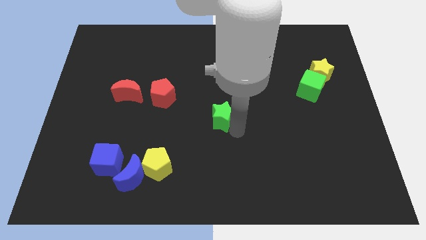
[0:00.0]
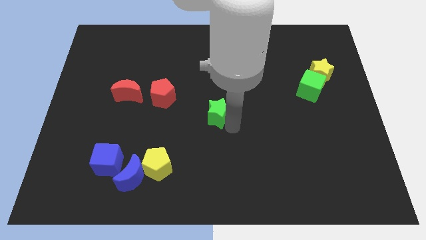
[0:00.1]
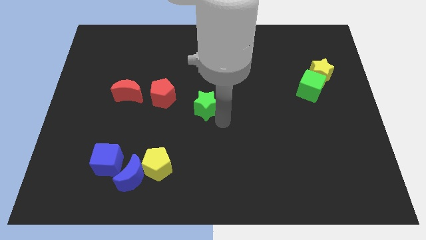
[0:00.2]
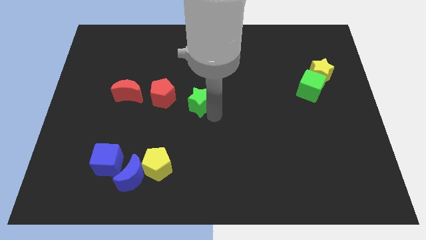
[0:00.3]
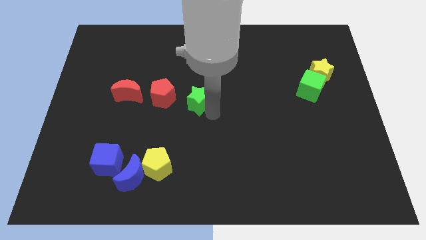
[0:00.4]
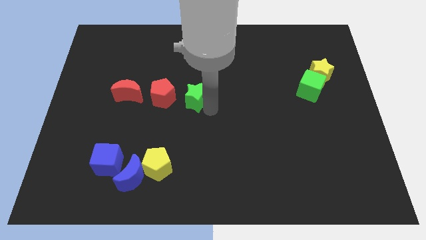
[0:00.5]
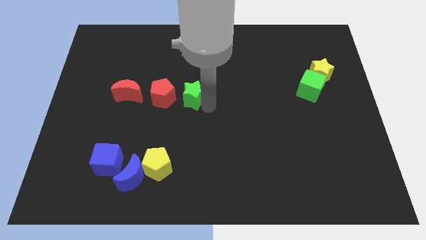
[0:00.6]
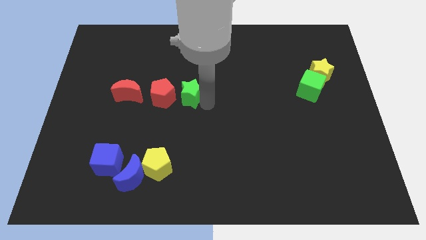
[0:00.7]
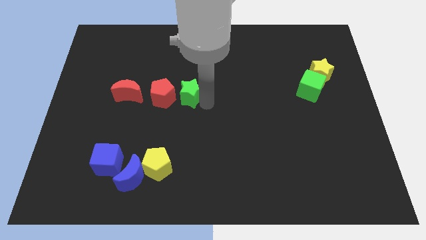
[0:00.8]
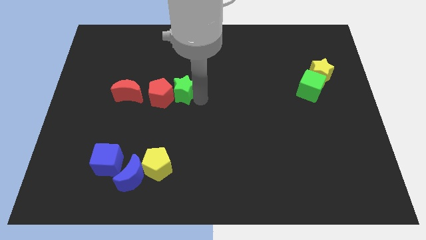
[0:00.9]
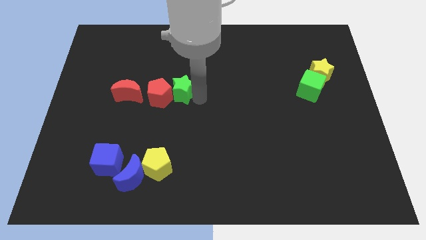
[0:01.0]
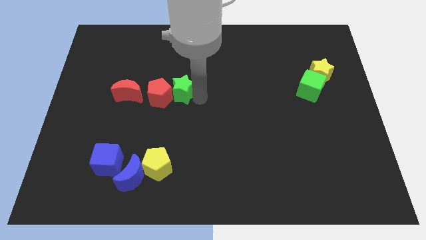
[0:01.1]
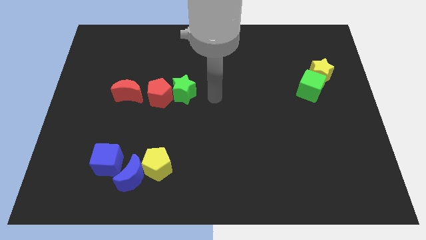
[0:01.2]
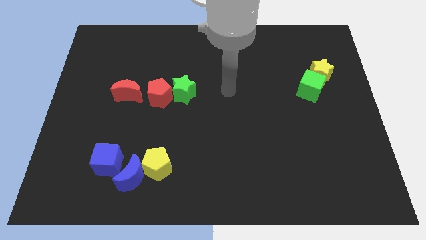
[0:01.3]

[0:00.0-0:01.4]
push the green star into the red pentagon

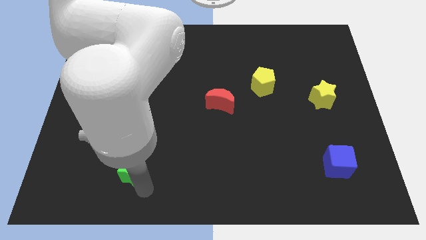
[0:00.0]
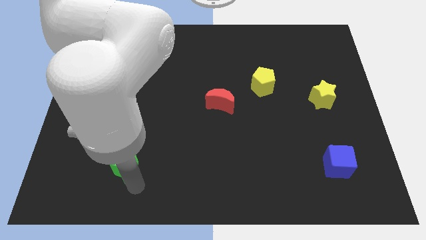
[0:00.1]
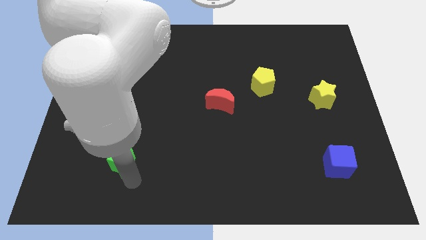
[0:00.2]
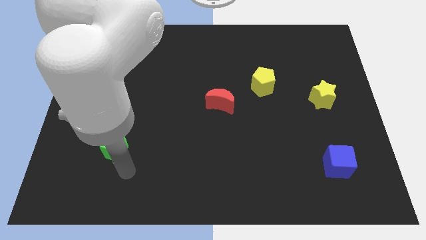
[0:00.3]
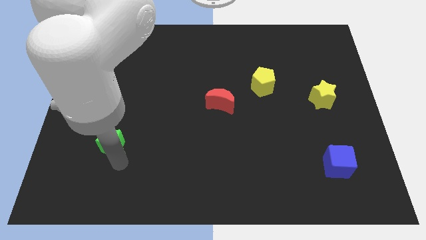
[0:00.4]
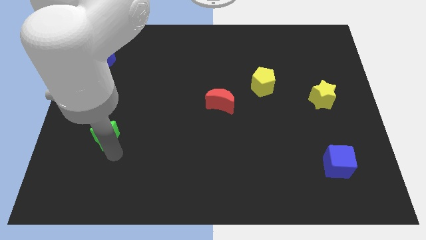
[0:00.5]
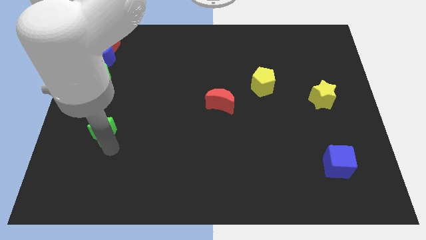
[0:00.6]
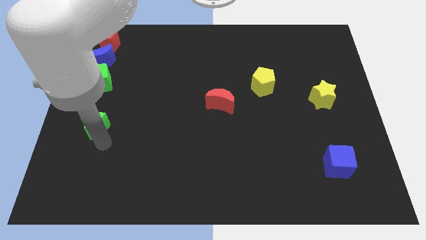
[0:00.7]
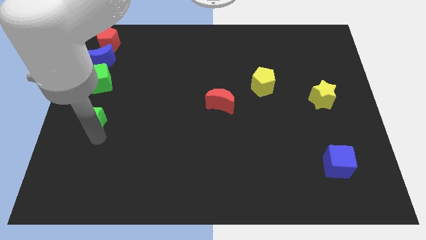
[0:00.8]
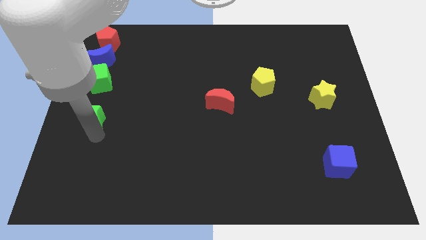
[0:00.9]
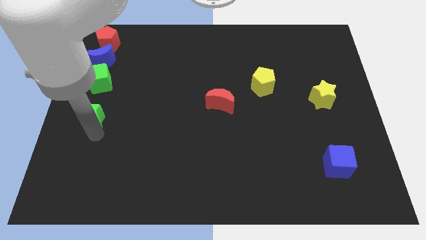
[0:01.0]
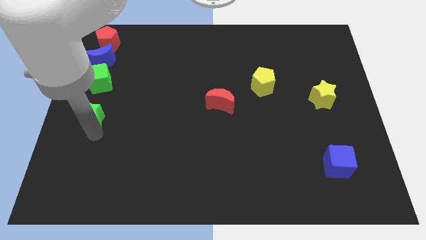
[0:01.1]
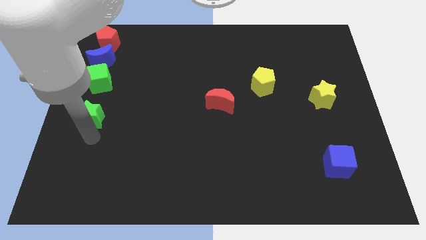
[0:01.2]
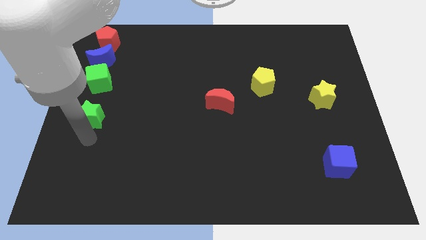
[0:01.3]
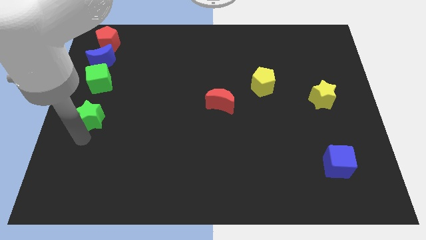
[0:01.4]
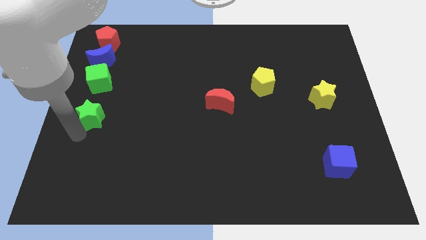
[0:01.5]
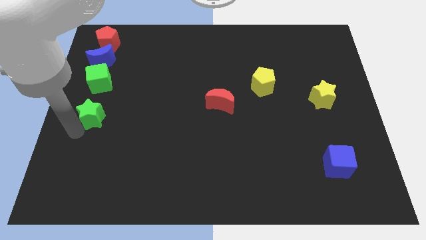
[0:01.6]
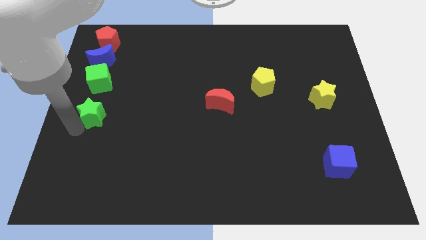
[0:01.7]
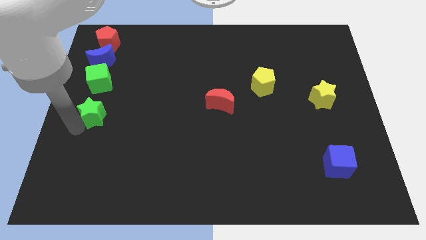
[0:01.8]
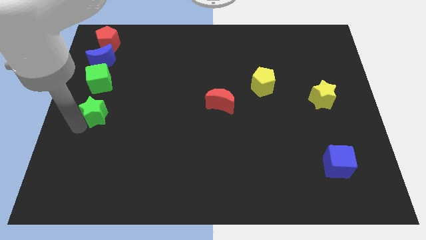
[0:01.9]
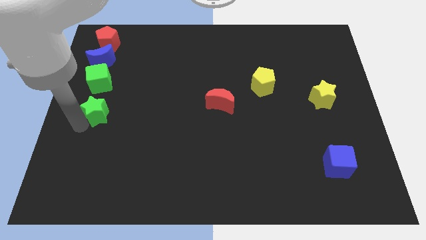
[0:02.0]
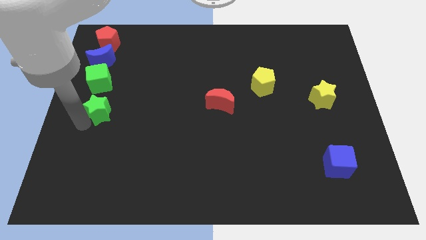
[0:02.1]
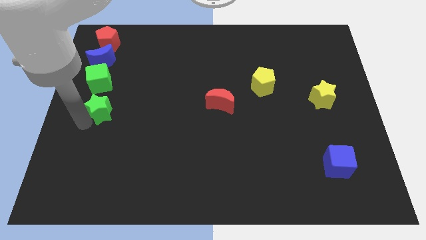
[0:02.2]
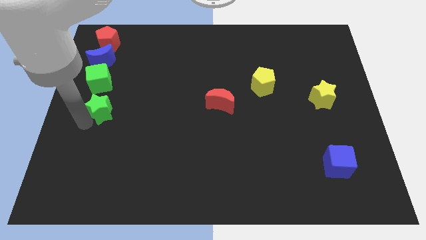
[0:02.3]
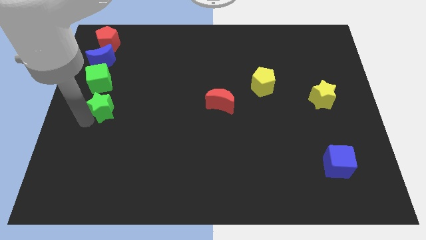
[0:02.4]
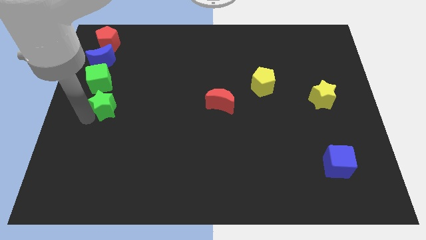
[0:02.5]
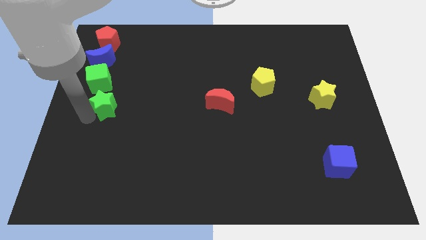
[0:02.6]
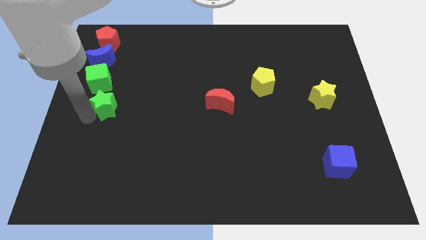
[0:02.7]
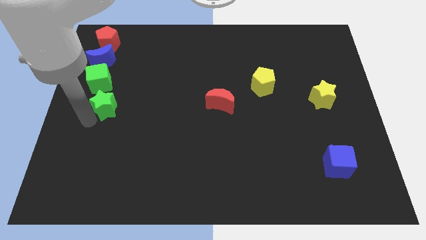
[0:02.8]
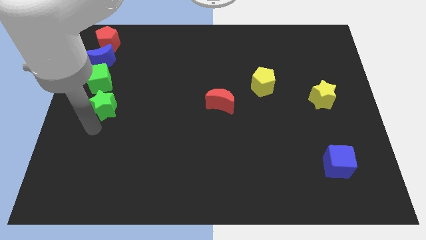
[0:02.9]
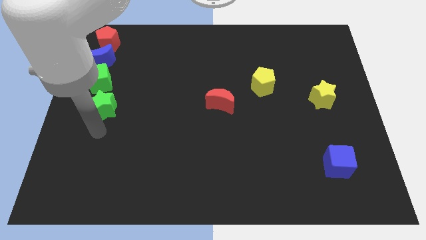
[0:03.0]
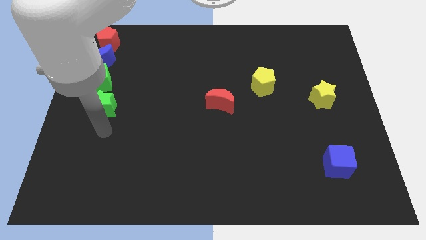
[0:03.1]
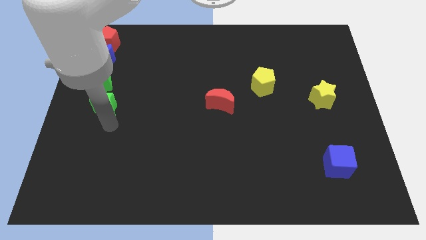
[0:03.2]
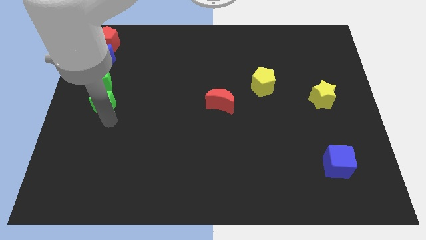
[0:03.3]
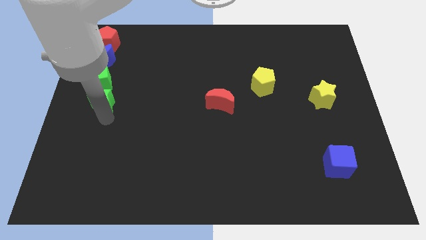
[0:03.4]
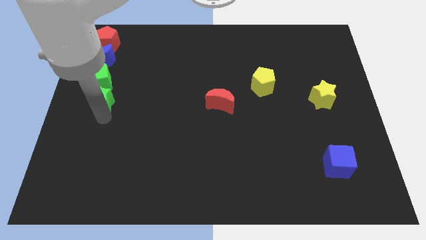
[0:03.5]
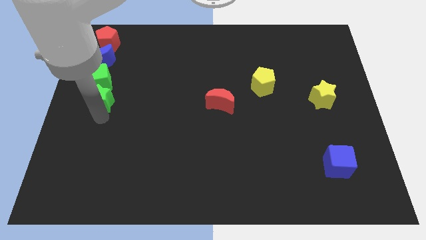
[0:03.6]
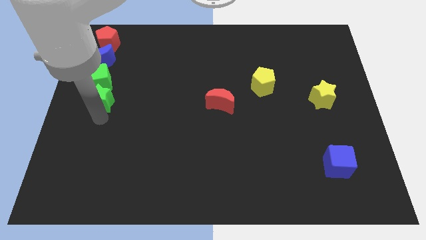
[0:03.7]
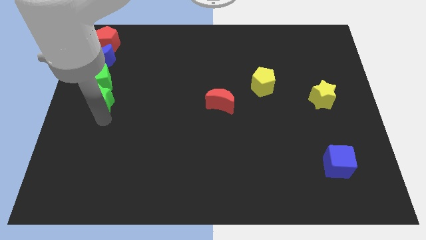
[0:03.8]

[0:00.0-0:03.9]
push green star below the green cube

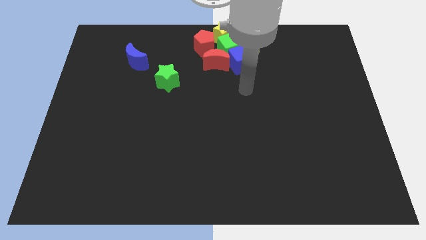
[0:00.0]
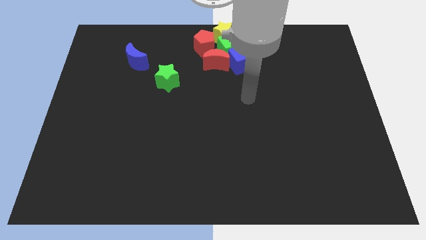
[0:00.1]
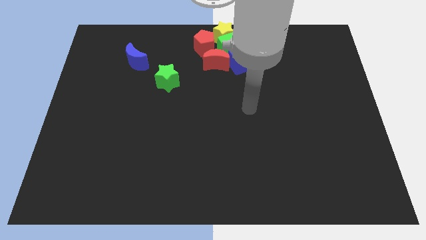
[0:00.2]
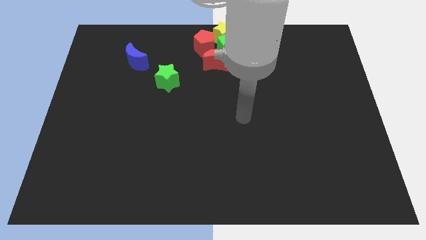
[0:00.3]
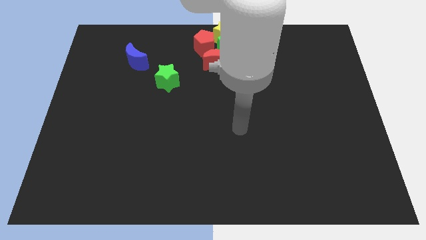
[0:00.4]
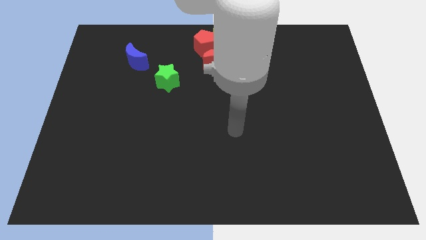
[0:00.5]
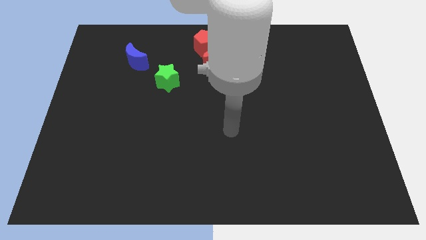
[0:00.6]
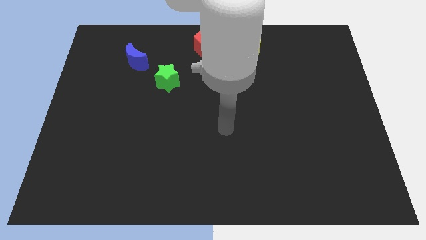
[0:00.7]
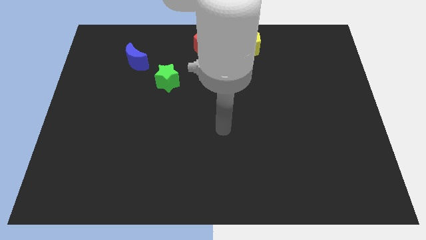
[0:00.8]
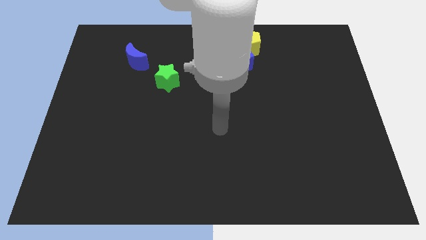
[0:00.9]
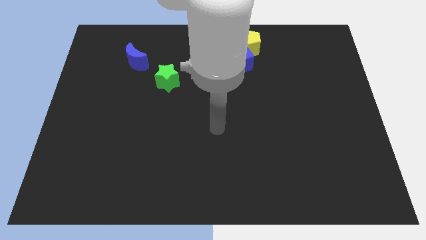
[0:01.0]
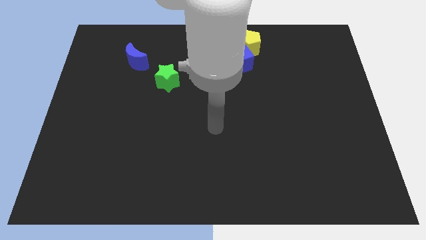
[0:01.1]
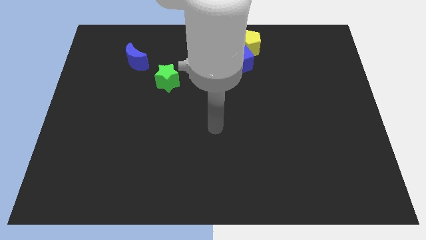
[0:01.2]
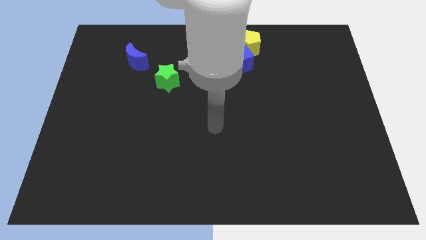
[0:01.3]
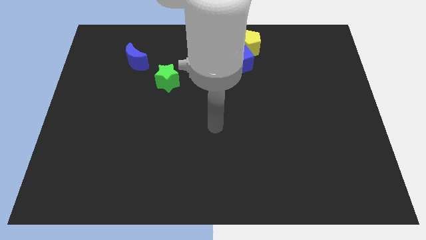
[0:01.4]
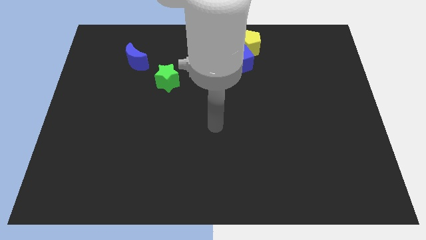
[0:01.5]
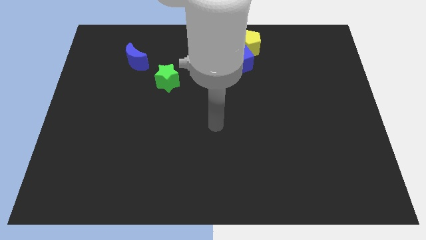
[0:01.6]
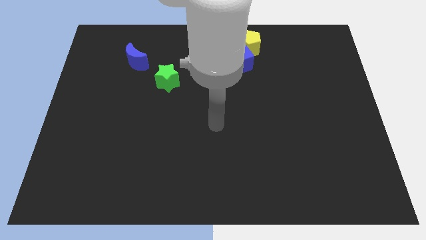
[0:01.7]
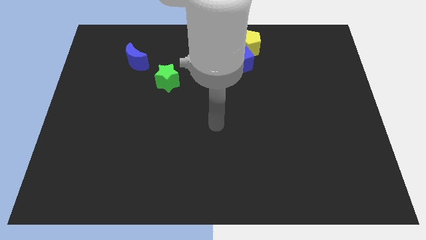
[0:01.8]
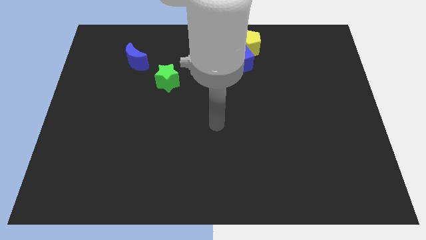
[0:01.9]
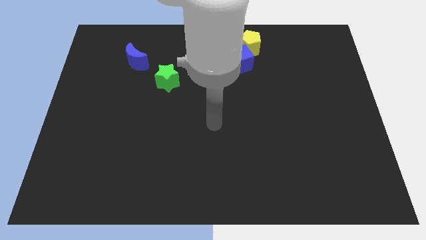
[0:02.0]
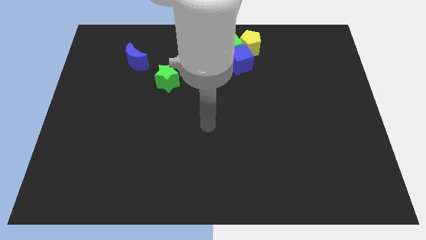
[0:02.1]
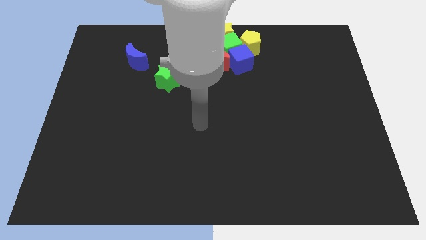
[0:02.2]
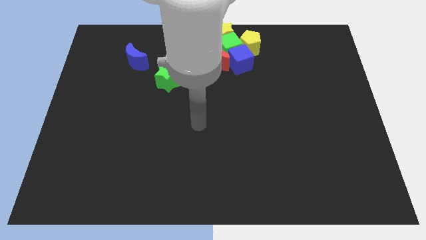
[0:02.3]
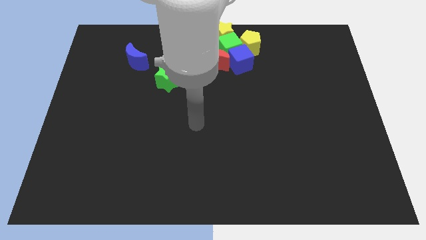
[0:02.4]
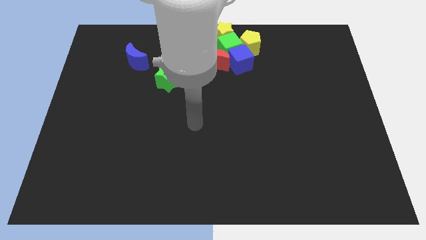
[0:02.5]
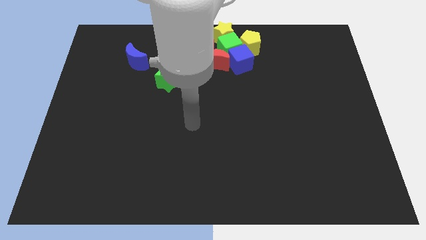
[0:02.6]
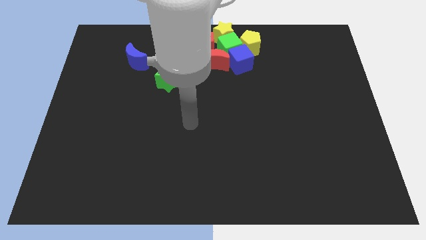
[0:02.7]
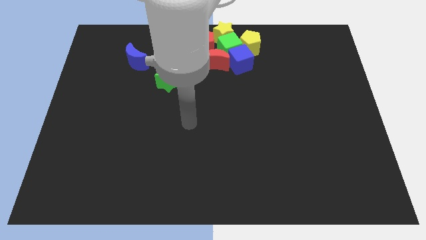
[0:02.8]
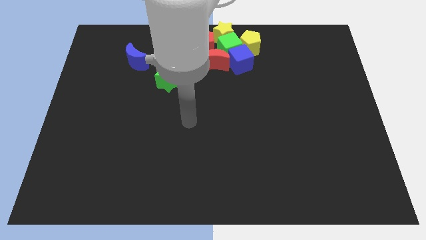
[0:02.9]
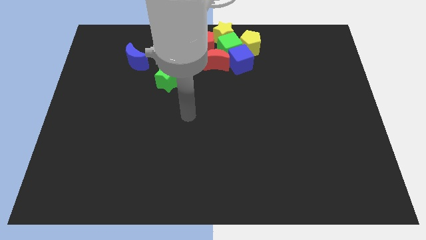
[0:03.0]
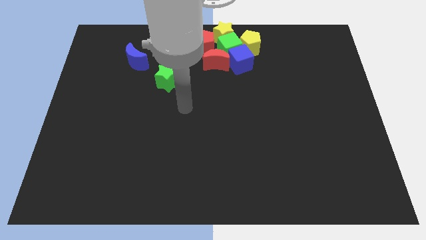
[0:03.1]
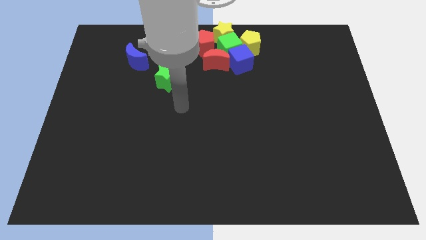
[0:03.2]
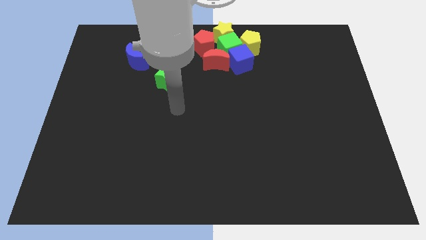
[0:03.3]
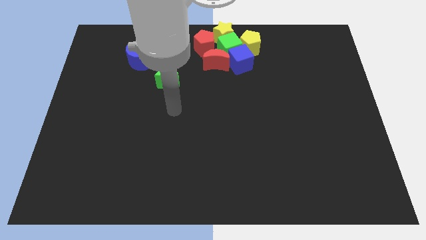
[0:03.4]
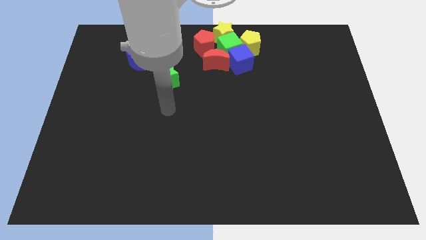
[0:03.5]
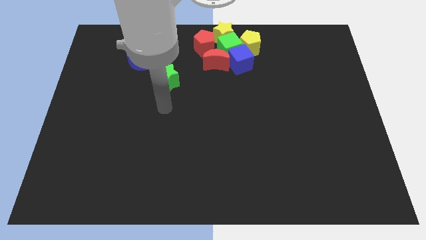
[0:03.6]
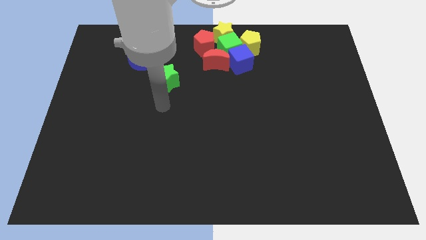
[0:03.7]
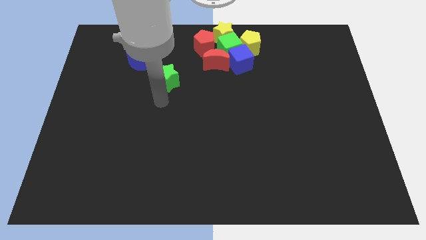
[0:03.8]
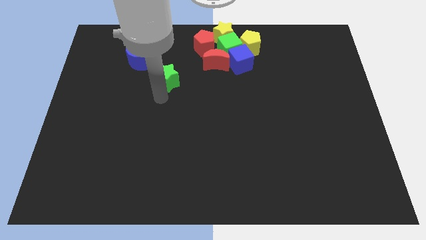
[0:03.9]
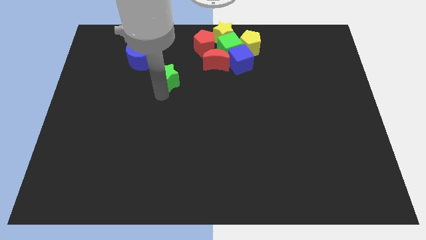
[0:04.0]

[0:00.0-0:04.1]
point your arm at the bottom side of the green star
